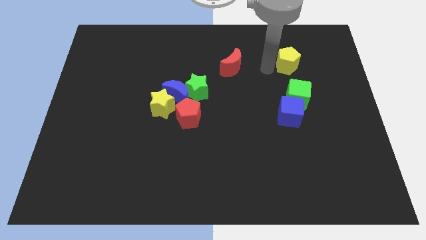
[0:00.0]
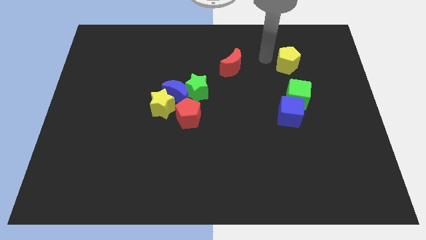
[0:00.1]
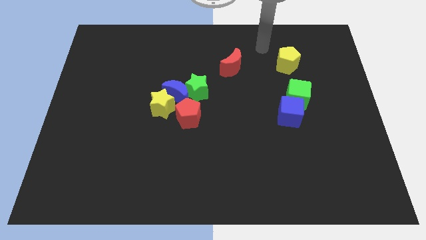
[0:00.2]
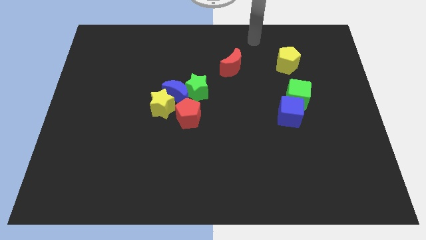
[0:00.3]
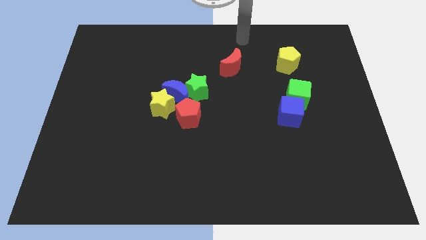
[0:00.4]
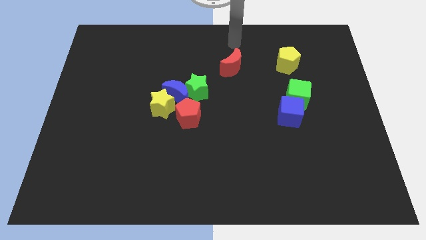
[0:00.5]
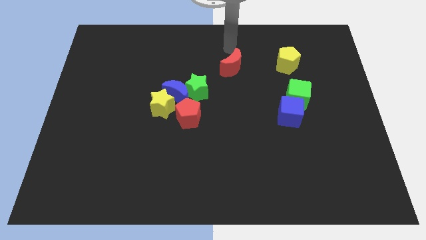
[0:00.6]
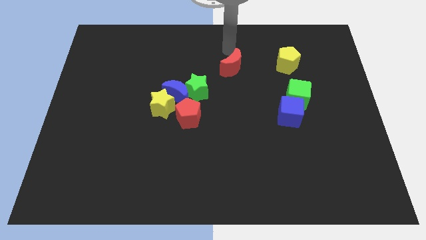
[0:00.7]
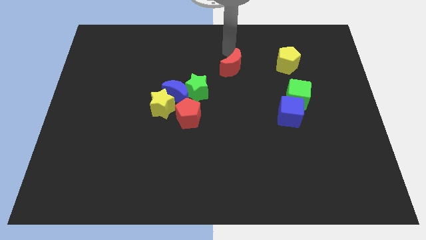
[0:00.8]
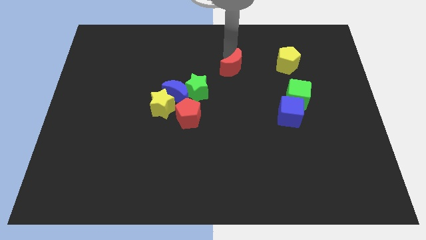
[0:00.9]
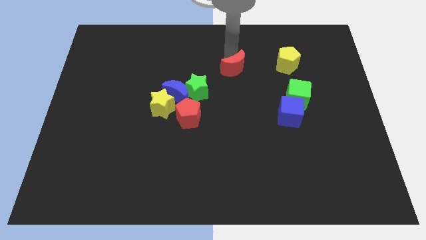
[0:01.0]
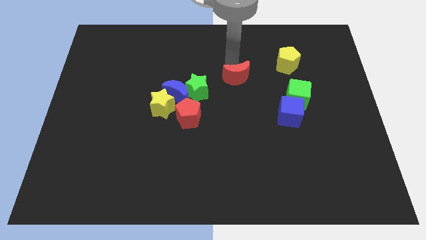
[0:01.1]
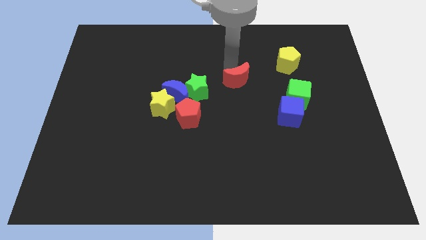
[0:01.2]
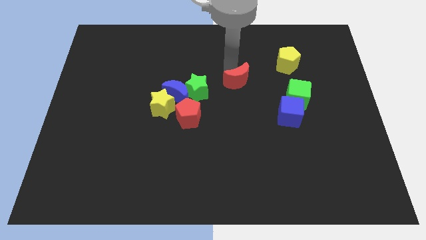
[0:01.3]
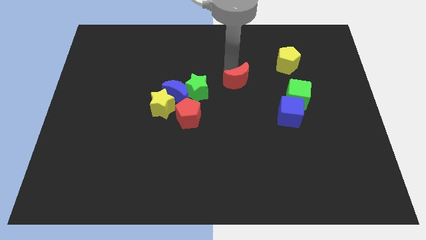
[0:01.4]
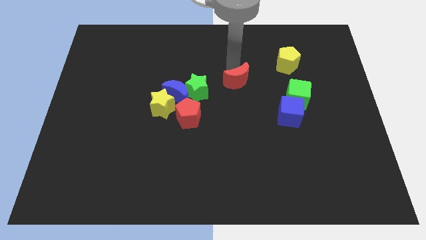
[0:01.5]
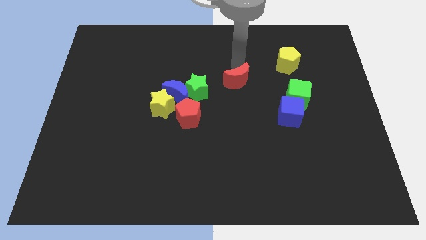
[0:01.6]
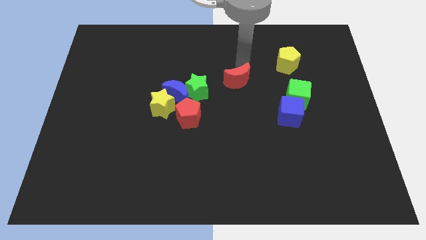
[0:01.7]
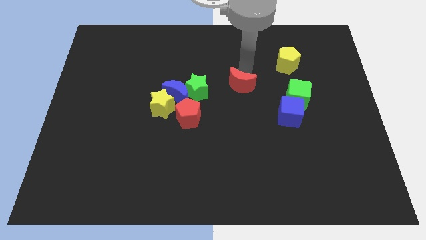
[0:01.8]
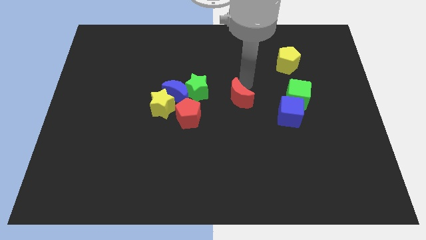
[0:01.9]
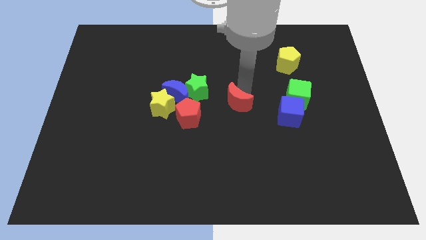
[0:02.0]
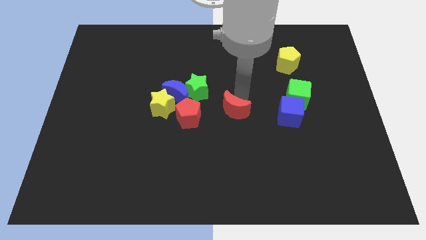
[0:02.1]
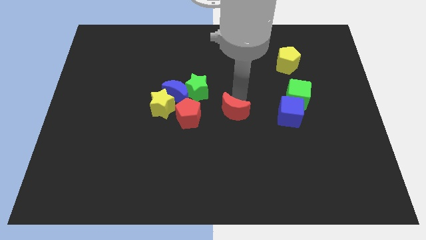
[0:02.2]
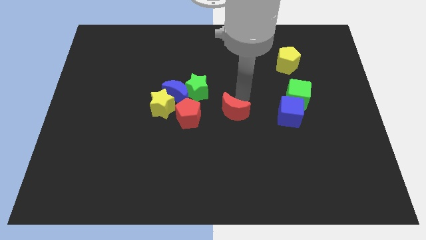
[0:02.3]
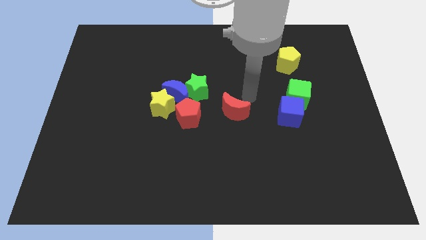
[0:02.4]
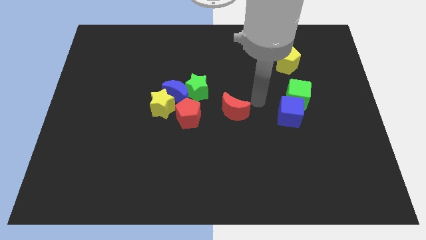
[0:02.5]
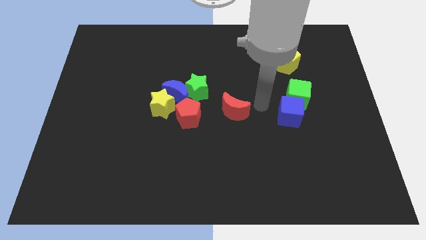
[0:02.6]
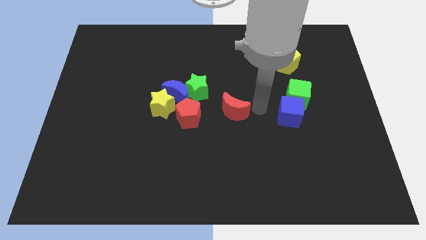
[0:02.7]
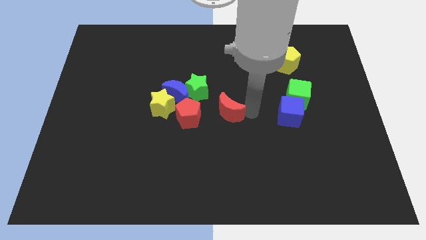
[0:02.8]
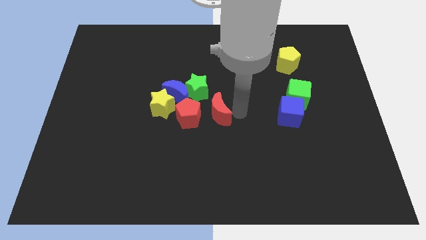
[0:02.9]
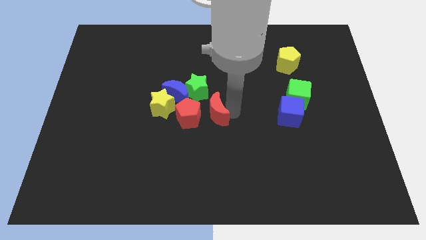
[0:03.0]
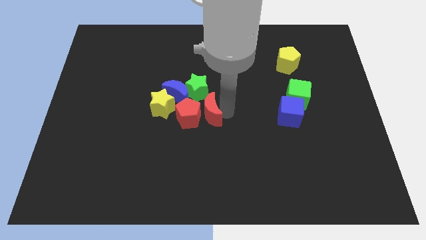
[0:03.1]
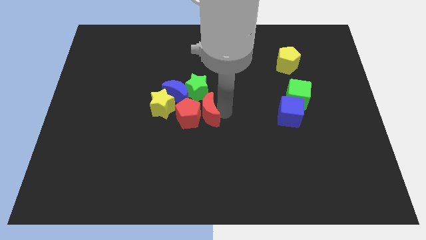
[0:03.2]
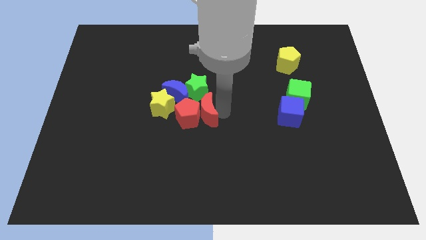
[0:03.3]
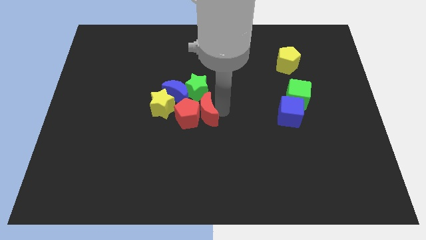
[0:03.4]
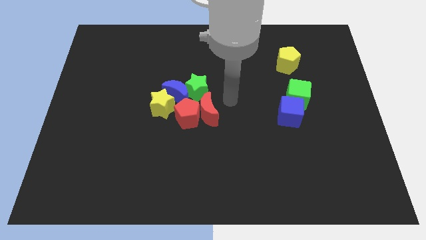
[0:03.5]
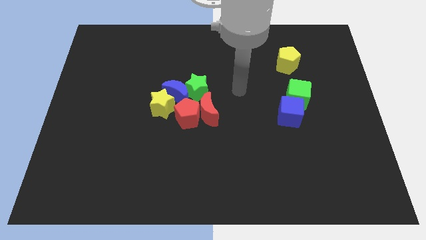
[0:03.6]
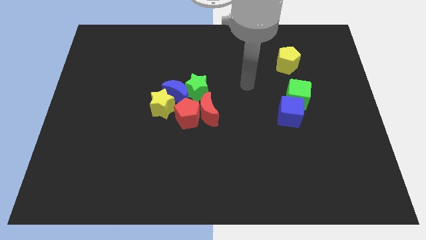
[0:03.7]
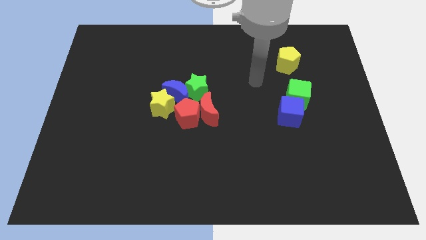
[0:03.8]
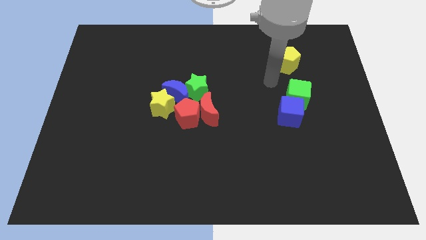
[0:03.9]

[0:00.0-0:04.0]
put the red crescent on the right side of the red pentagon

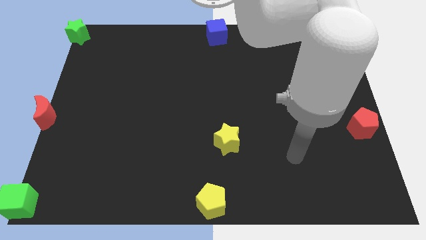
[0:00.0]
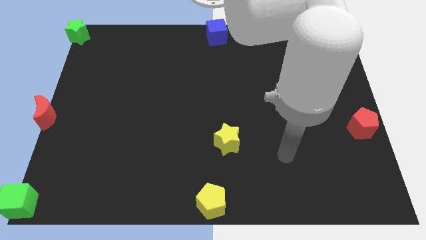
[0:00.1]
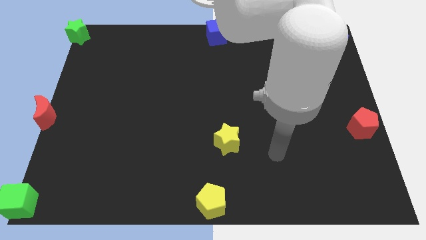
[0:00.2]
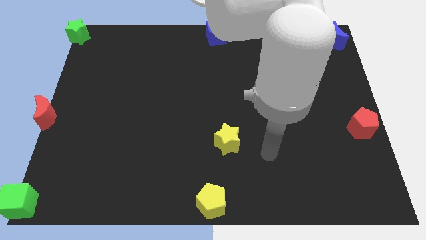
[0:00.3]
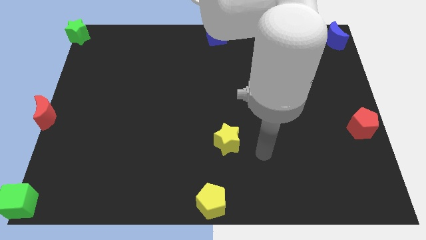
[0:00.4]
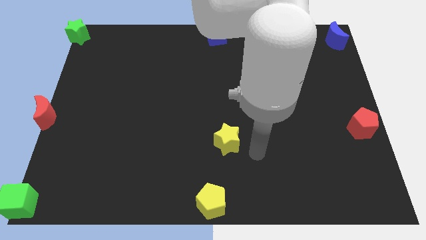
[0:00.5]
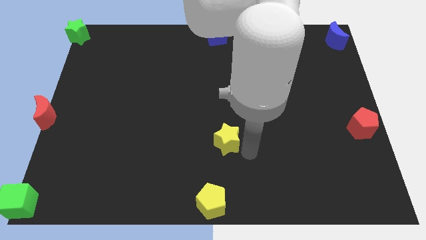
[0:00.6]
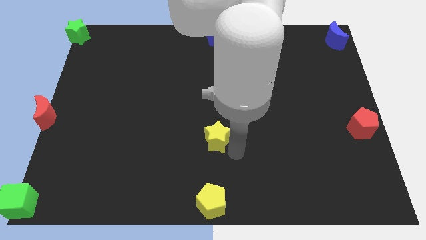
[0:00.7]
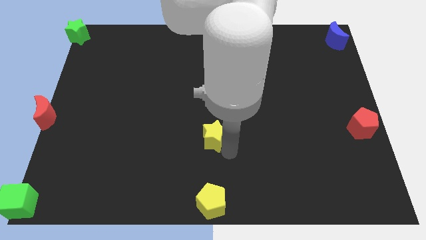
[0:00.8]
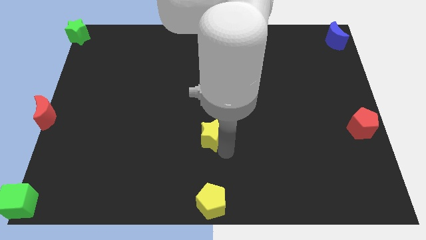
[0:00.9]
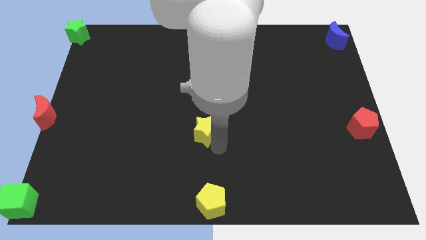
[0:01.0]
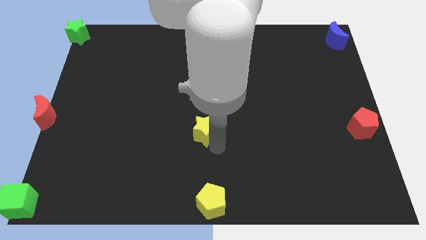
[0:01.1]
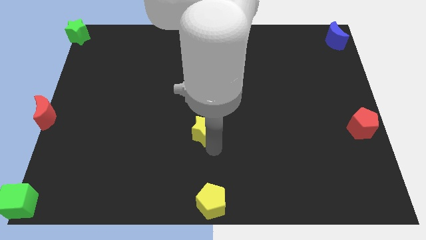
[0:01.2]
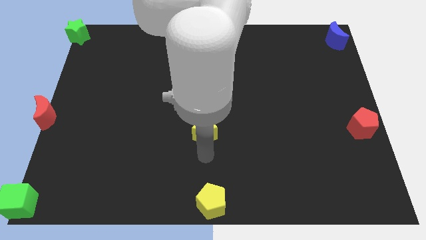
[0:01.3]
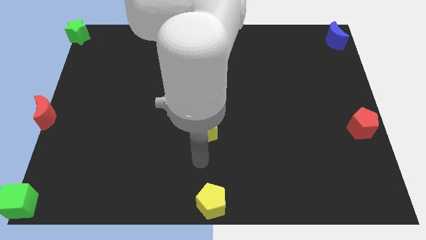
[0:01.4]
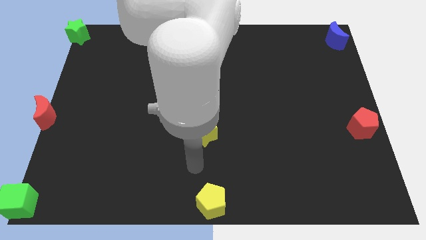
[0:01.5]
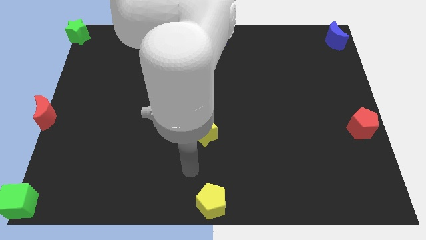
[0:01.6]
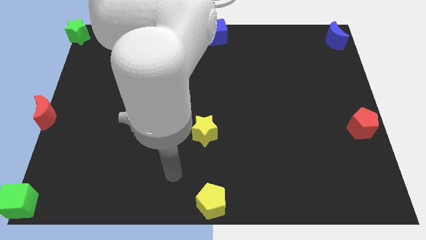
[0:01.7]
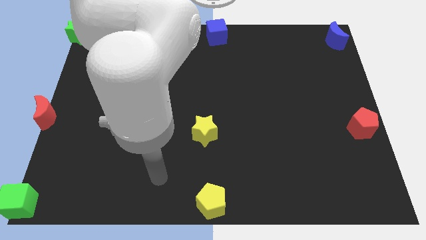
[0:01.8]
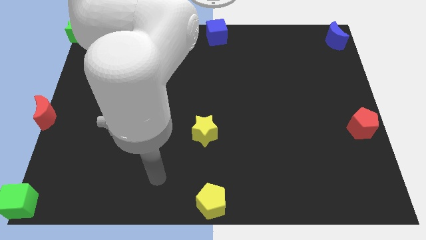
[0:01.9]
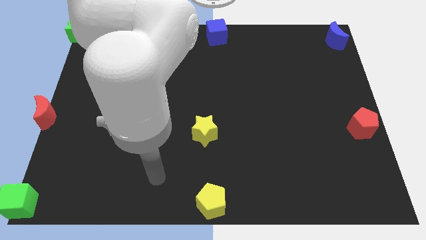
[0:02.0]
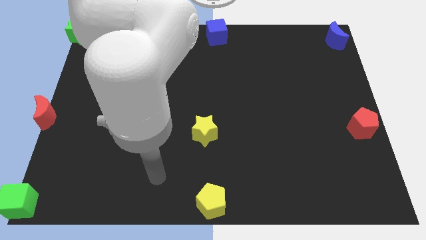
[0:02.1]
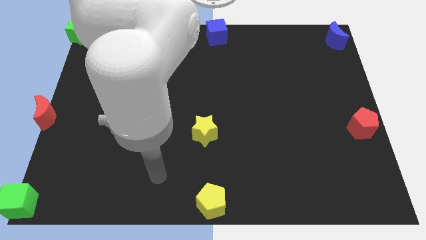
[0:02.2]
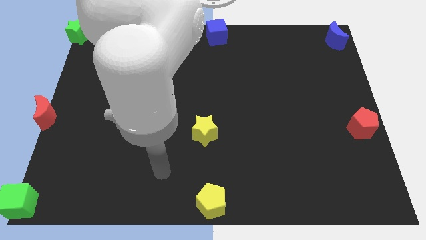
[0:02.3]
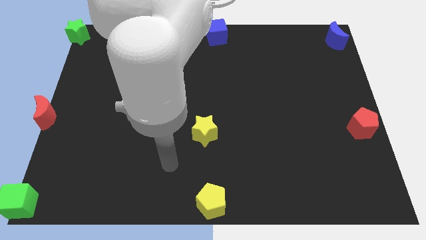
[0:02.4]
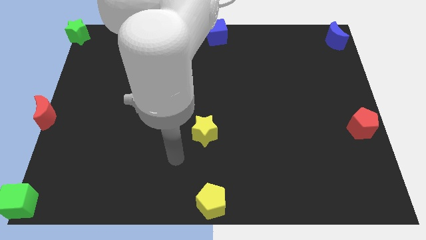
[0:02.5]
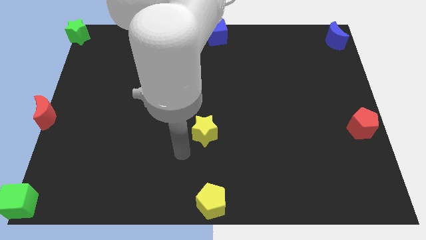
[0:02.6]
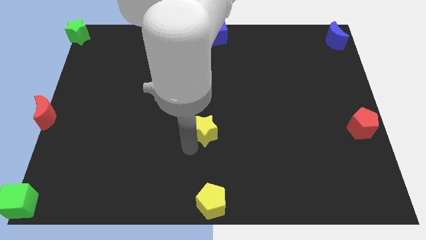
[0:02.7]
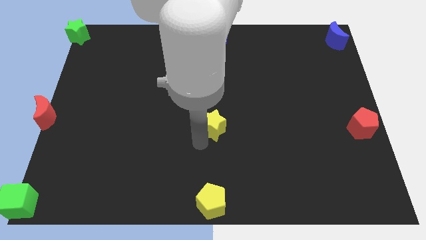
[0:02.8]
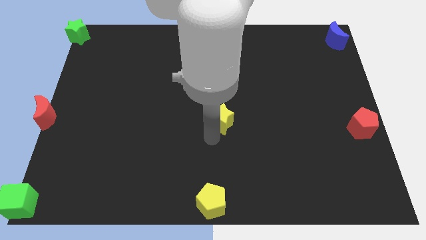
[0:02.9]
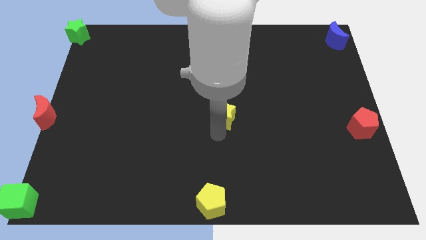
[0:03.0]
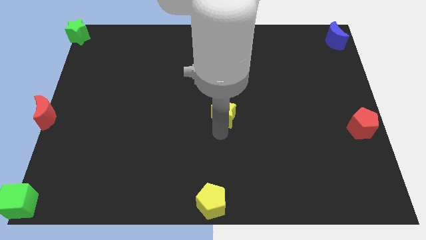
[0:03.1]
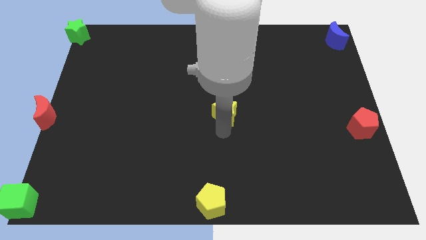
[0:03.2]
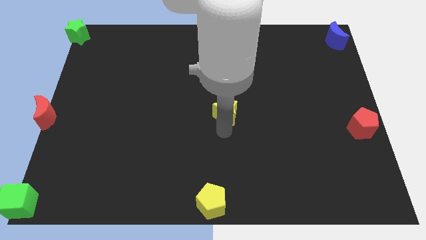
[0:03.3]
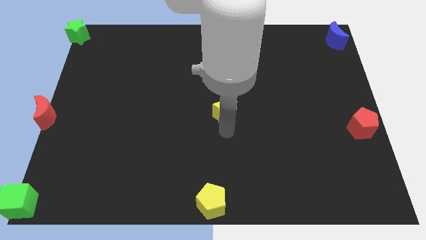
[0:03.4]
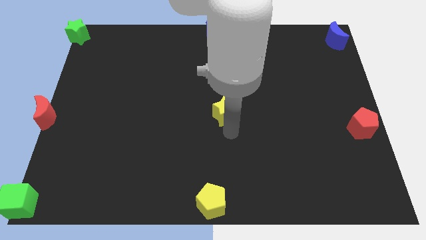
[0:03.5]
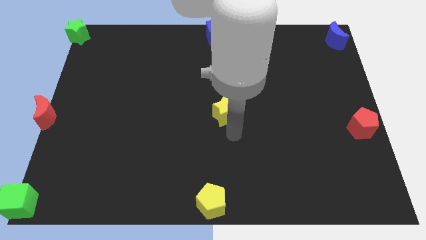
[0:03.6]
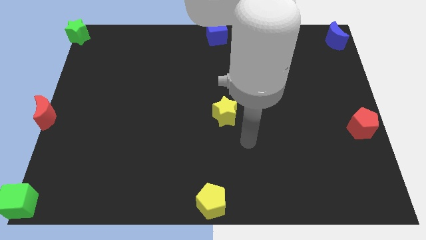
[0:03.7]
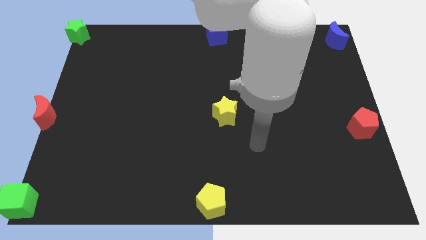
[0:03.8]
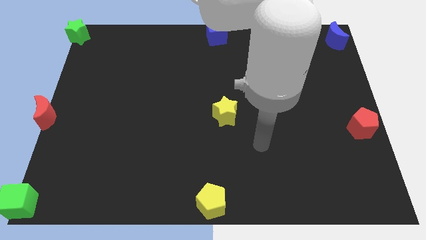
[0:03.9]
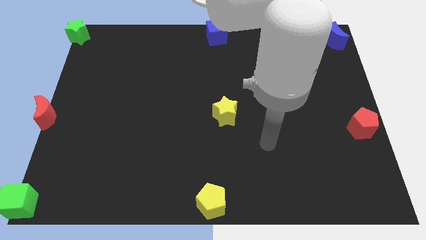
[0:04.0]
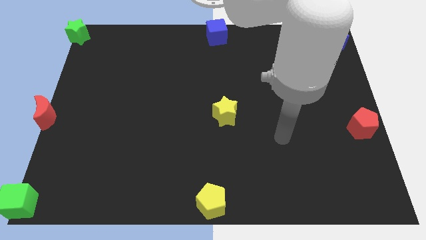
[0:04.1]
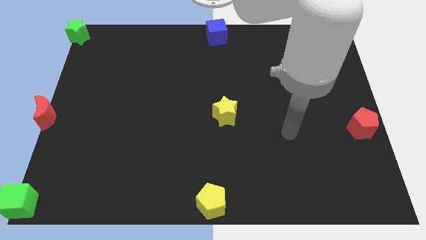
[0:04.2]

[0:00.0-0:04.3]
push the yellow star to the center of the board

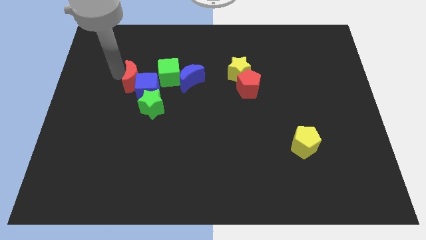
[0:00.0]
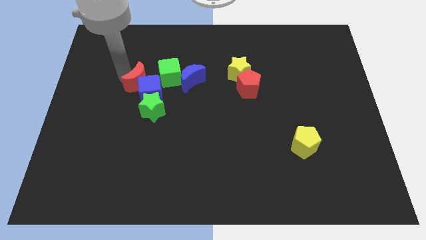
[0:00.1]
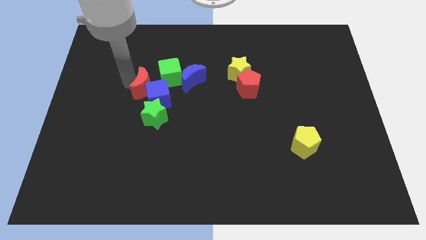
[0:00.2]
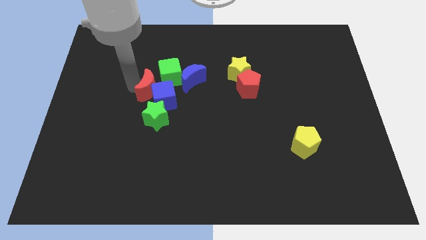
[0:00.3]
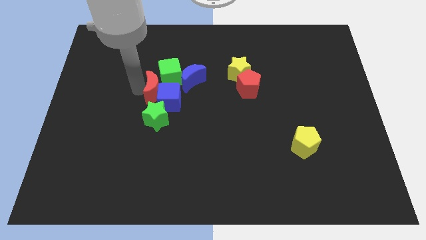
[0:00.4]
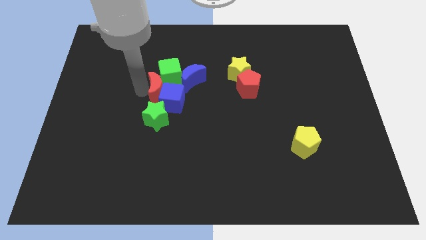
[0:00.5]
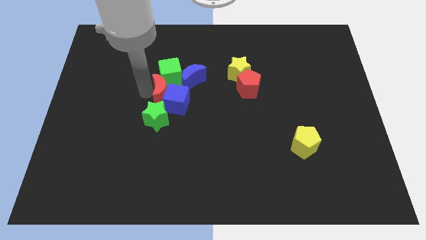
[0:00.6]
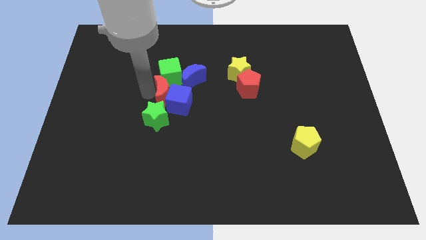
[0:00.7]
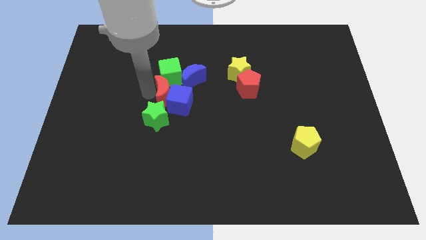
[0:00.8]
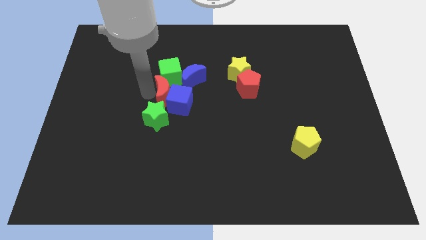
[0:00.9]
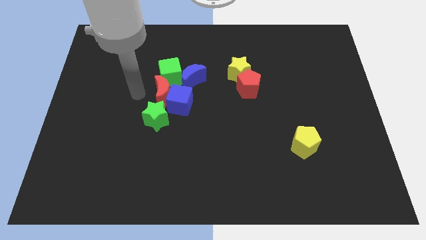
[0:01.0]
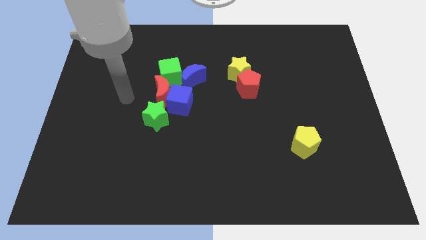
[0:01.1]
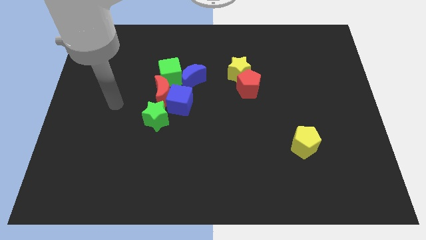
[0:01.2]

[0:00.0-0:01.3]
make a group of green cubered moongreen starblue cube and blue moon
